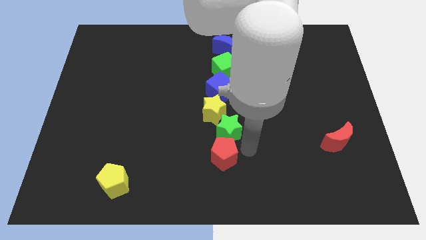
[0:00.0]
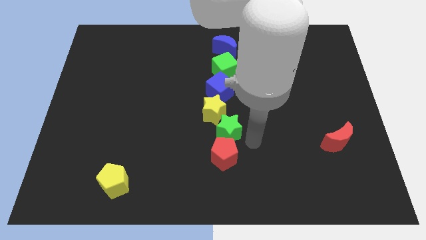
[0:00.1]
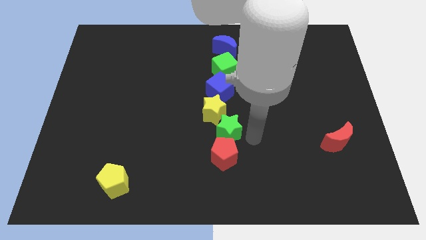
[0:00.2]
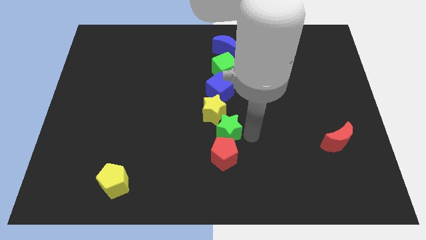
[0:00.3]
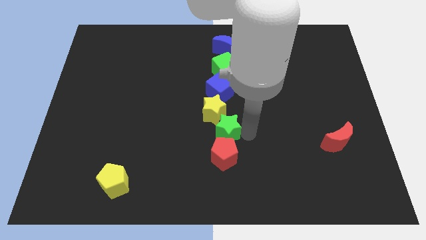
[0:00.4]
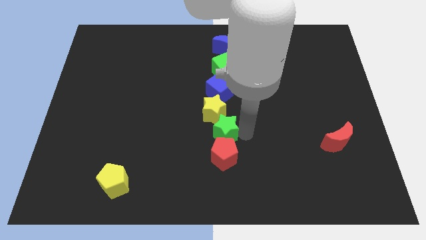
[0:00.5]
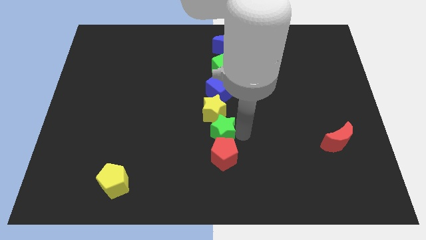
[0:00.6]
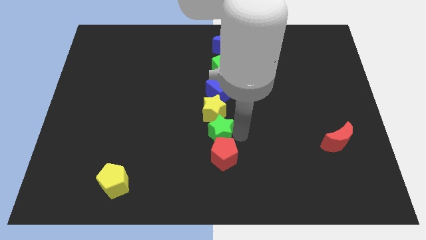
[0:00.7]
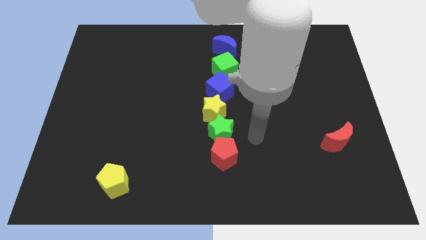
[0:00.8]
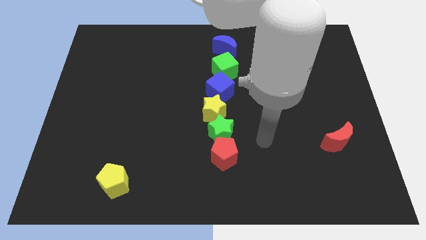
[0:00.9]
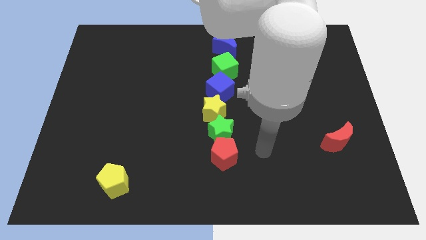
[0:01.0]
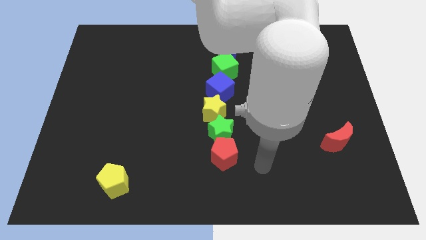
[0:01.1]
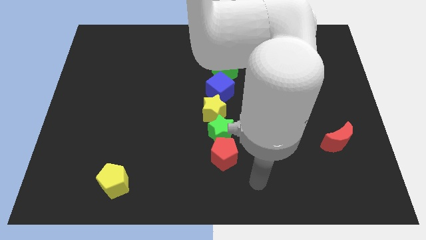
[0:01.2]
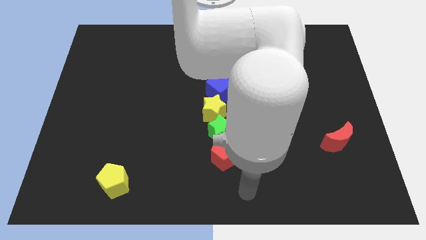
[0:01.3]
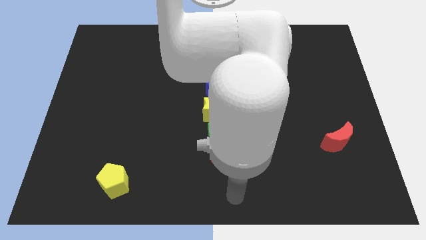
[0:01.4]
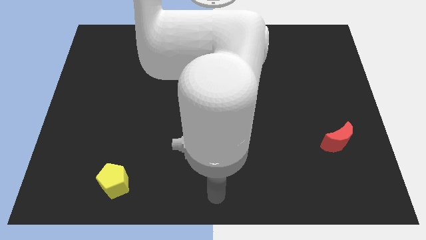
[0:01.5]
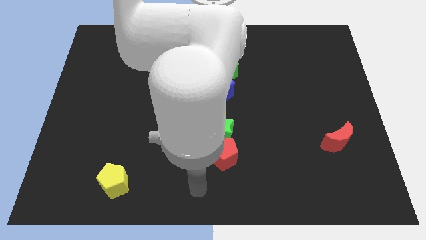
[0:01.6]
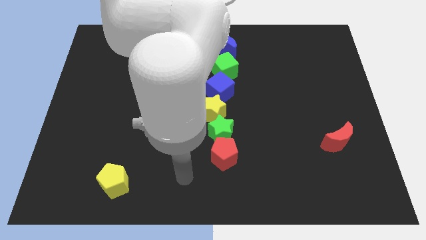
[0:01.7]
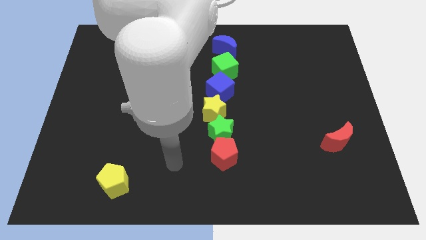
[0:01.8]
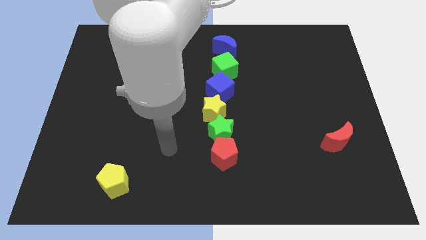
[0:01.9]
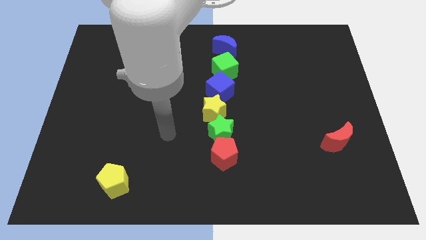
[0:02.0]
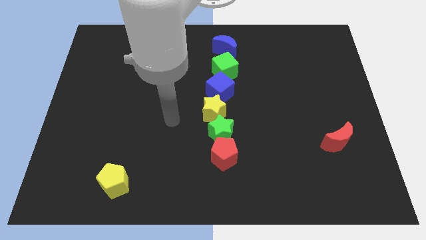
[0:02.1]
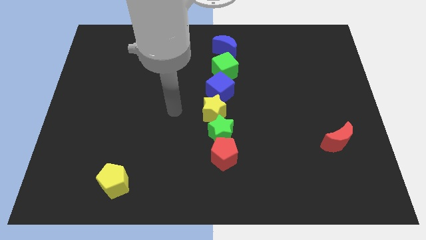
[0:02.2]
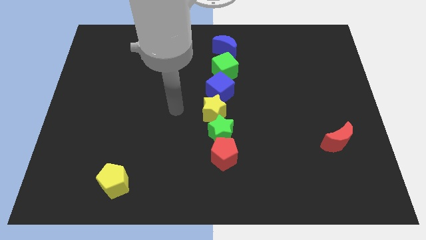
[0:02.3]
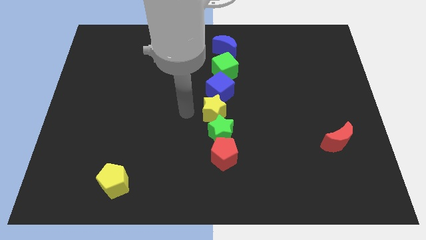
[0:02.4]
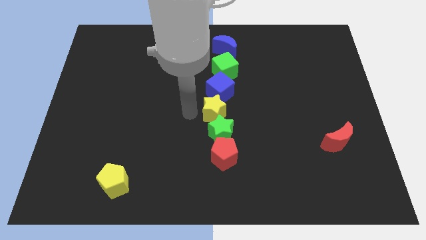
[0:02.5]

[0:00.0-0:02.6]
point arm beside yellow star

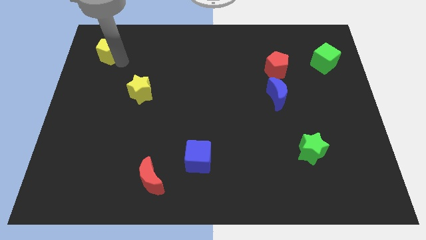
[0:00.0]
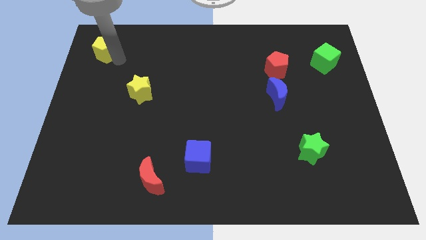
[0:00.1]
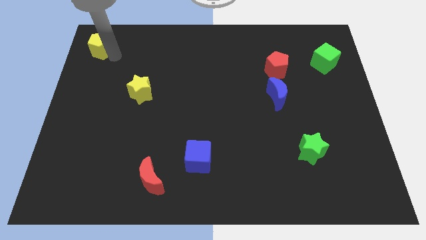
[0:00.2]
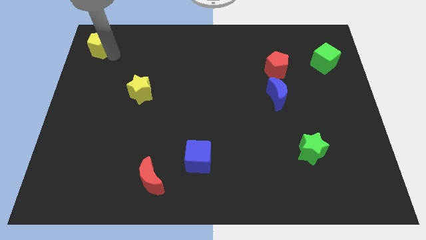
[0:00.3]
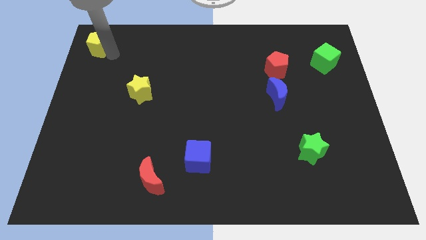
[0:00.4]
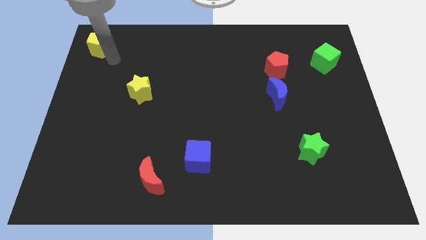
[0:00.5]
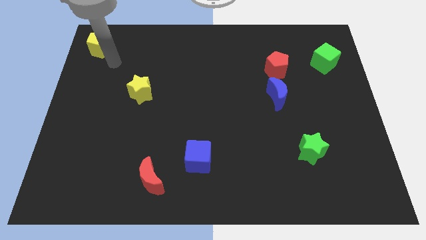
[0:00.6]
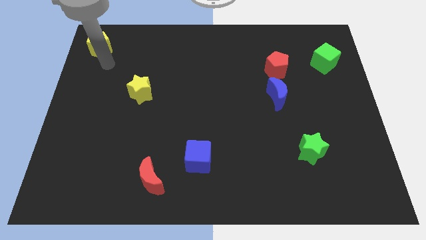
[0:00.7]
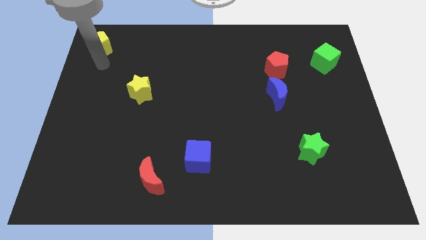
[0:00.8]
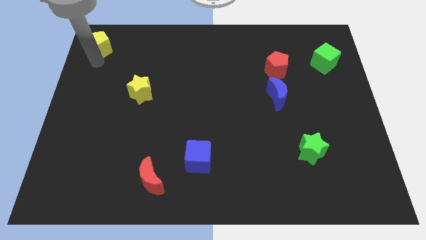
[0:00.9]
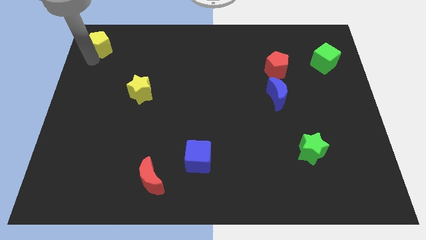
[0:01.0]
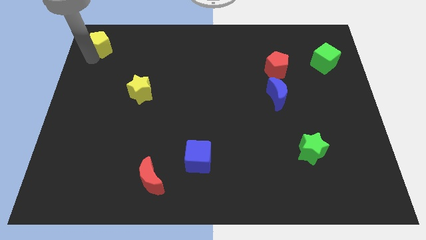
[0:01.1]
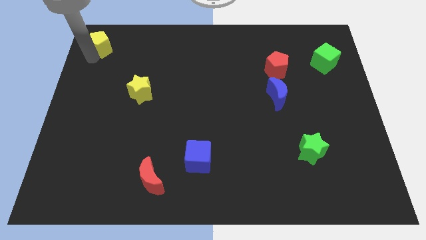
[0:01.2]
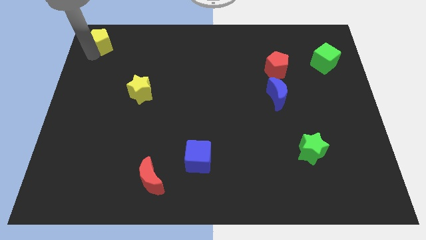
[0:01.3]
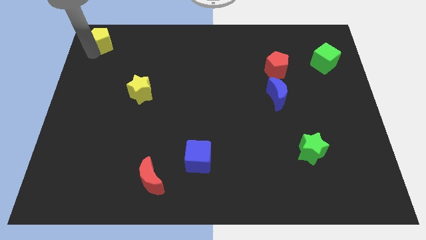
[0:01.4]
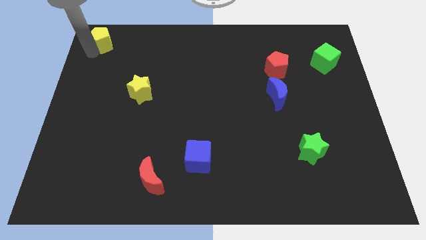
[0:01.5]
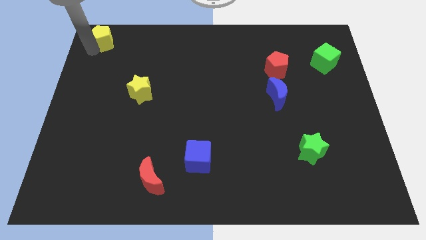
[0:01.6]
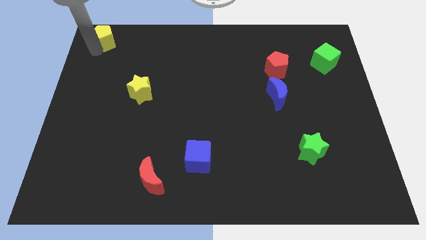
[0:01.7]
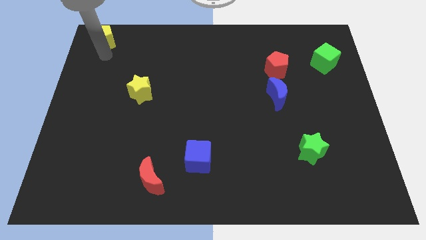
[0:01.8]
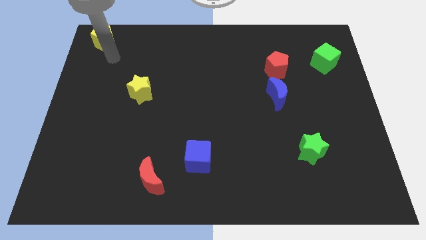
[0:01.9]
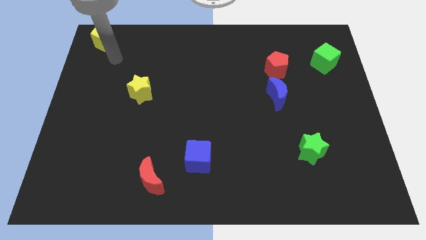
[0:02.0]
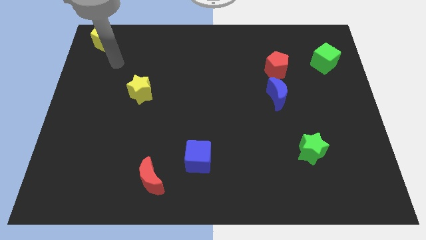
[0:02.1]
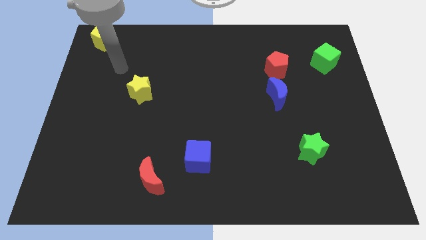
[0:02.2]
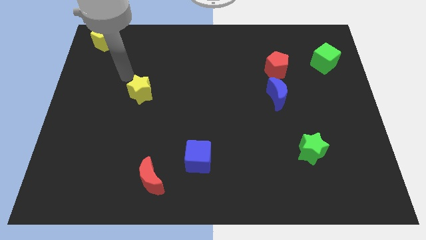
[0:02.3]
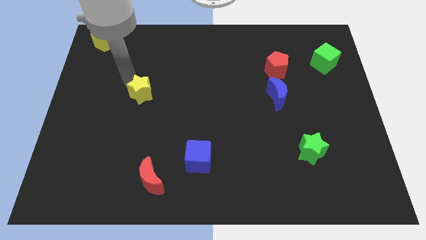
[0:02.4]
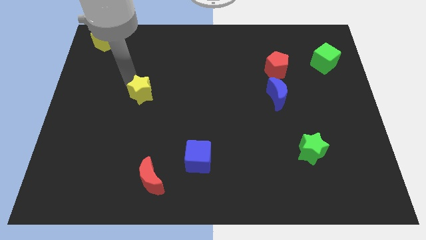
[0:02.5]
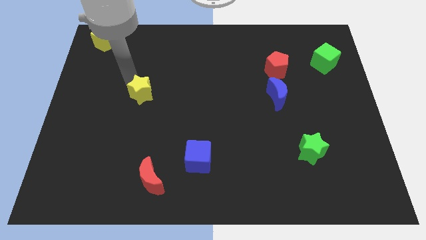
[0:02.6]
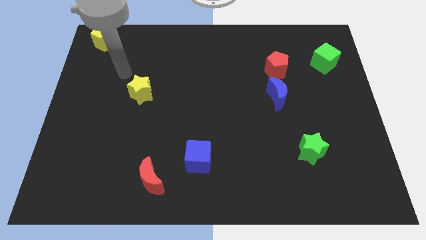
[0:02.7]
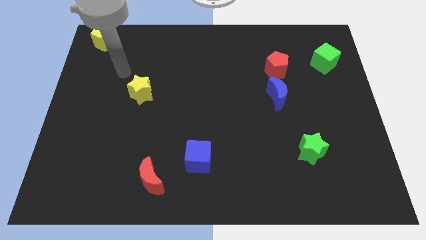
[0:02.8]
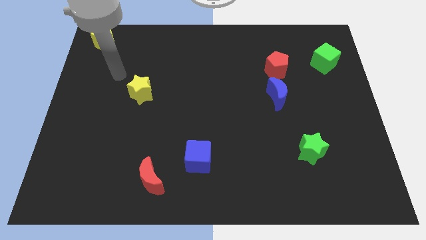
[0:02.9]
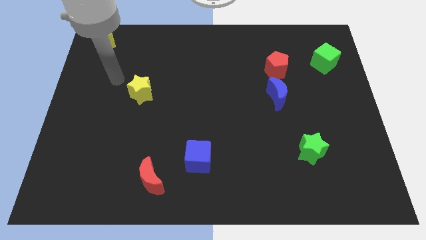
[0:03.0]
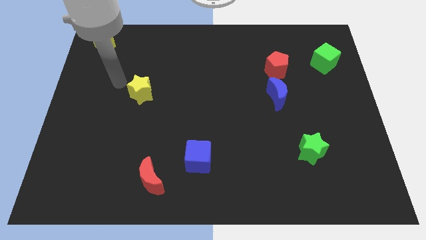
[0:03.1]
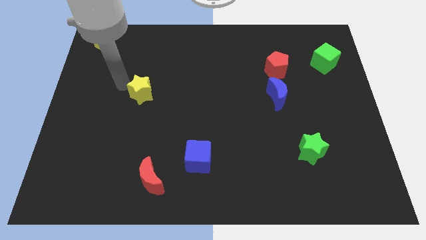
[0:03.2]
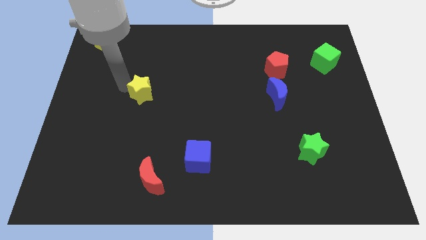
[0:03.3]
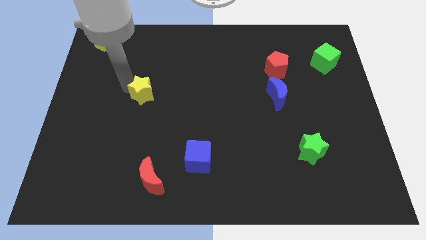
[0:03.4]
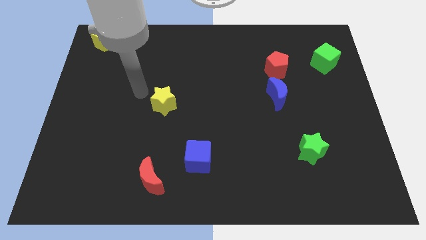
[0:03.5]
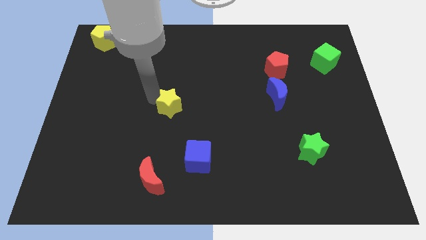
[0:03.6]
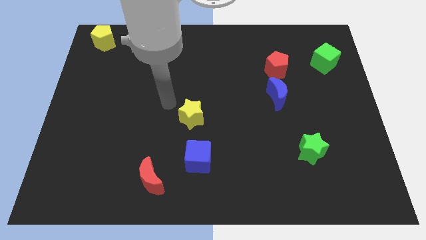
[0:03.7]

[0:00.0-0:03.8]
place the yellow star diagonally to the bottom side of the yellow pentagon

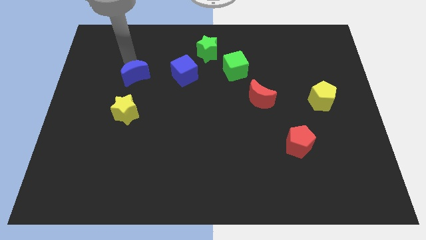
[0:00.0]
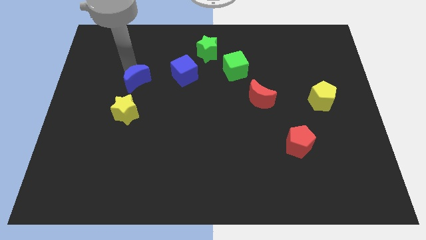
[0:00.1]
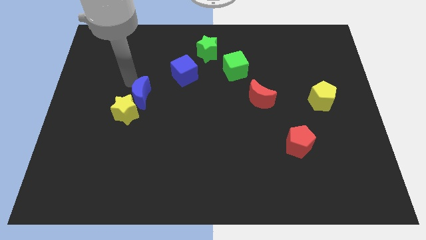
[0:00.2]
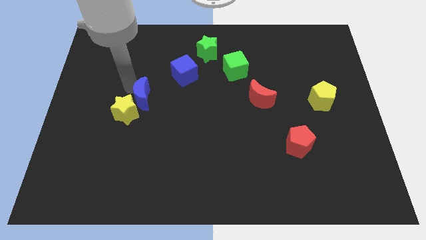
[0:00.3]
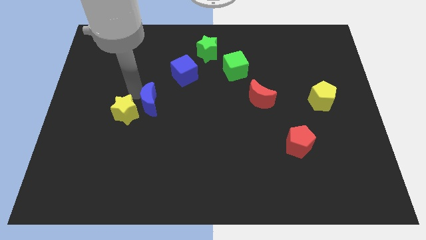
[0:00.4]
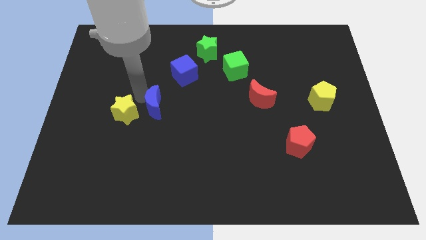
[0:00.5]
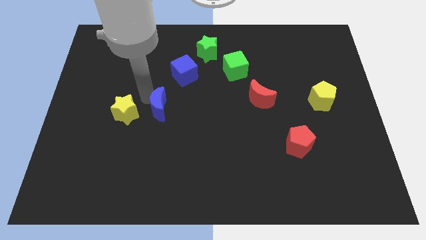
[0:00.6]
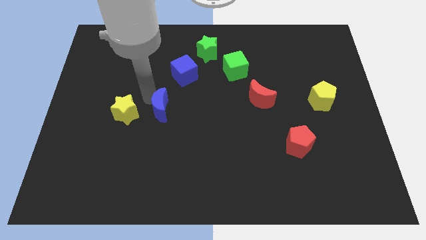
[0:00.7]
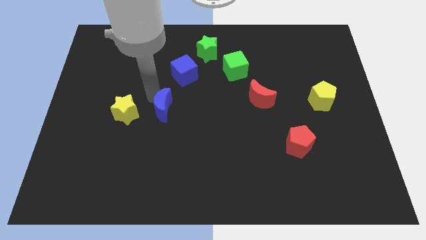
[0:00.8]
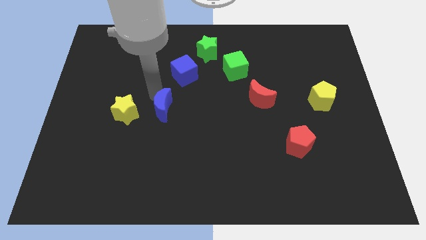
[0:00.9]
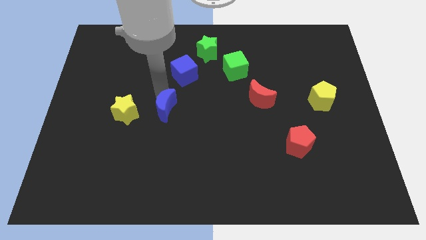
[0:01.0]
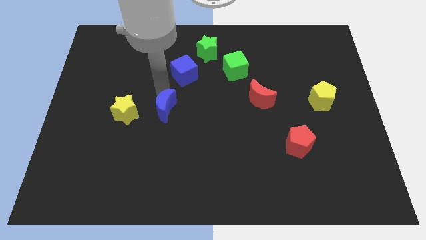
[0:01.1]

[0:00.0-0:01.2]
slightly down the blue moon to the bottom side of the blue cube

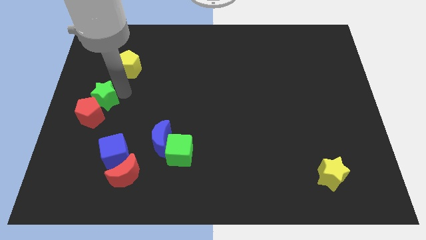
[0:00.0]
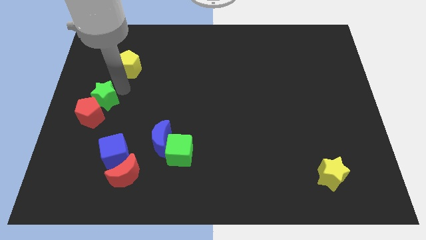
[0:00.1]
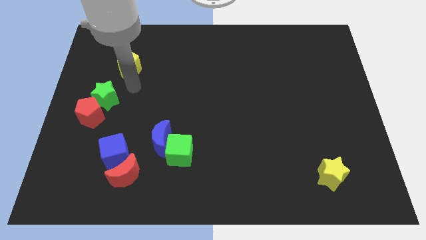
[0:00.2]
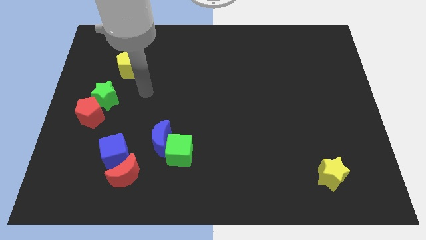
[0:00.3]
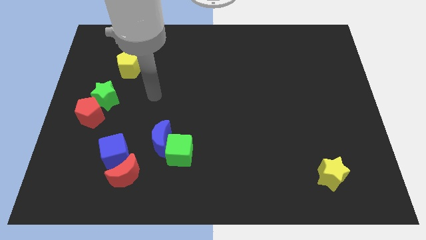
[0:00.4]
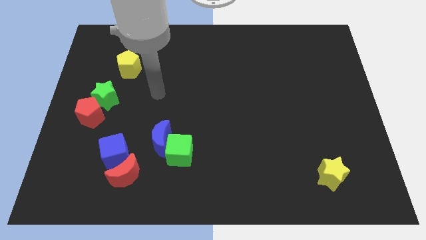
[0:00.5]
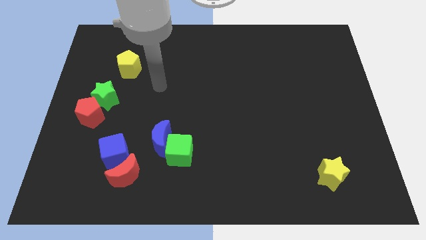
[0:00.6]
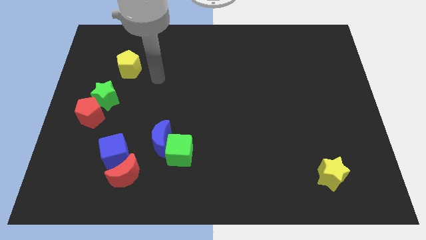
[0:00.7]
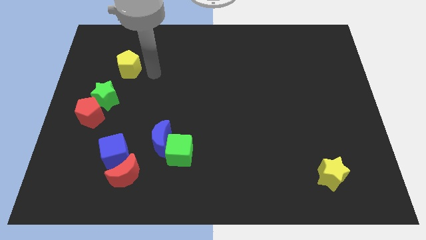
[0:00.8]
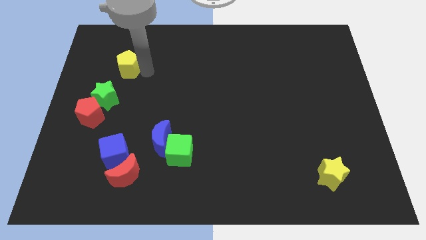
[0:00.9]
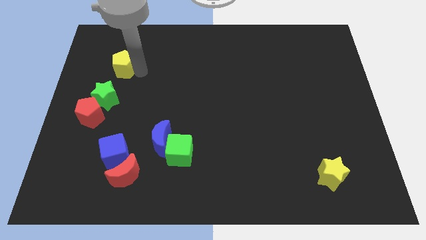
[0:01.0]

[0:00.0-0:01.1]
place the arm to the right of yellow pentagon

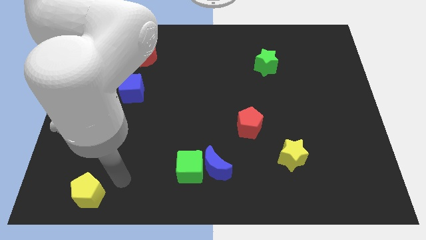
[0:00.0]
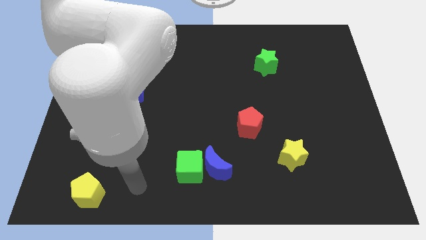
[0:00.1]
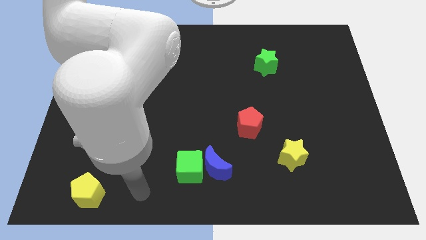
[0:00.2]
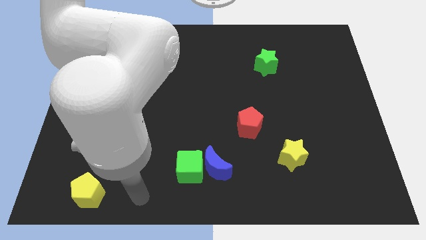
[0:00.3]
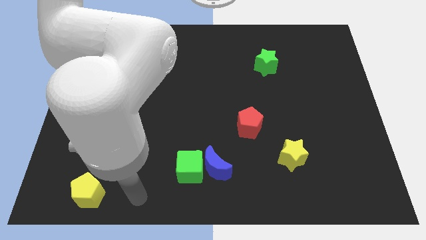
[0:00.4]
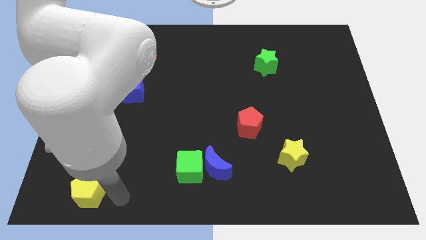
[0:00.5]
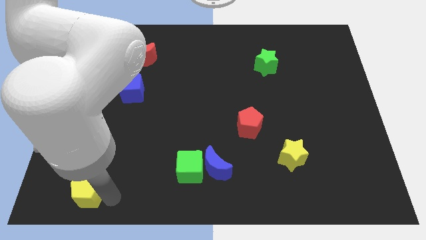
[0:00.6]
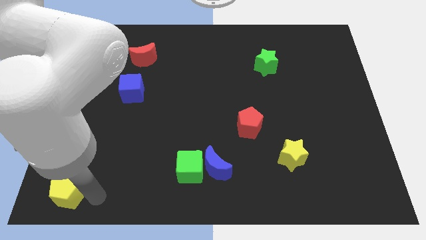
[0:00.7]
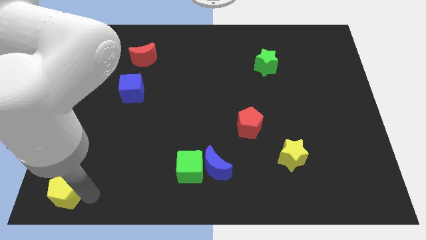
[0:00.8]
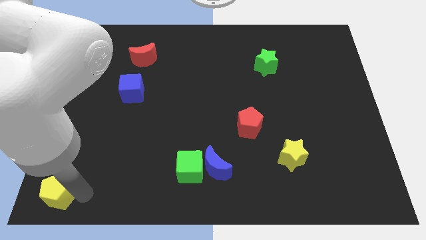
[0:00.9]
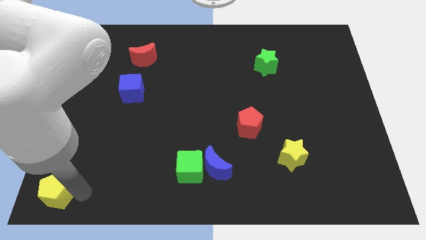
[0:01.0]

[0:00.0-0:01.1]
slide yellow pentagon to the bottom left
